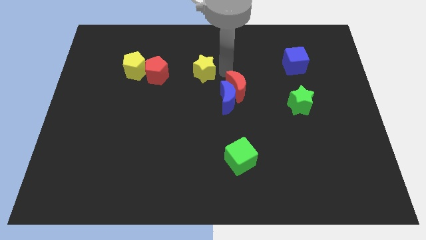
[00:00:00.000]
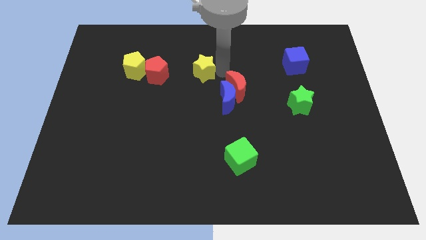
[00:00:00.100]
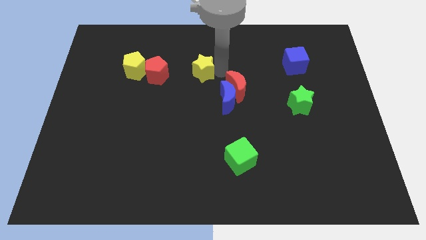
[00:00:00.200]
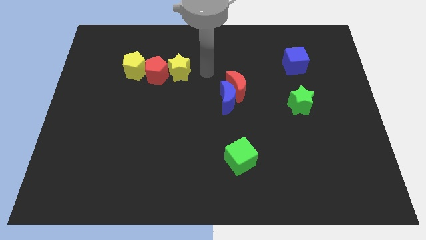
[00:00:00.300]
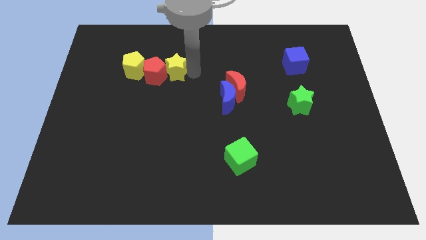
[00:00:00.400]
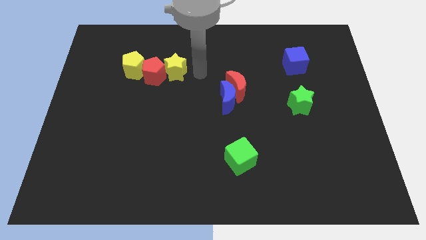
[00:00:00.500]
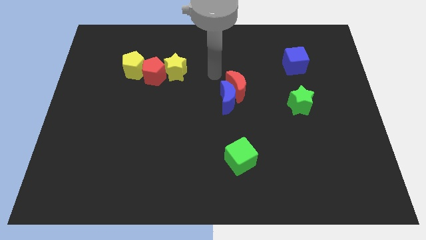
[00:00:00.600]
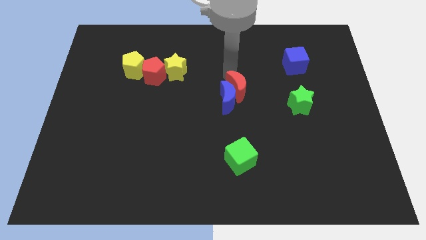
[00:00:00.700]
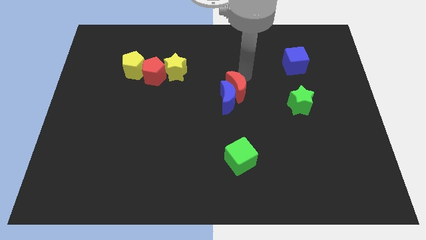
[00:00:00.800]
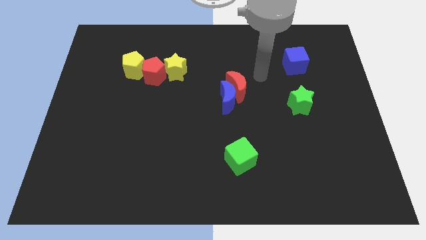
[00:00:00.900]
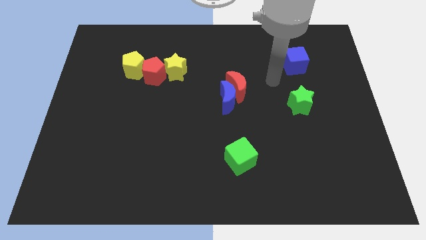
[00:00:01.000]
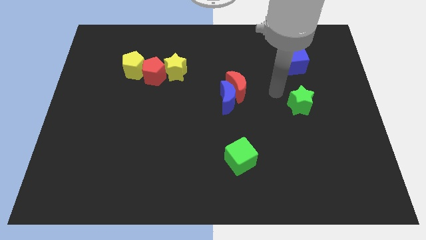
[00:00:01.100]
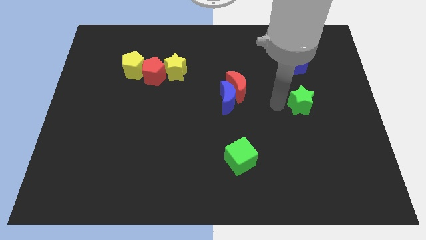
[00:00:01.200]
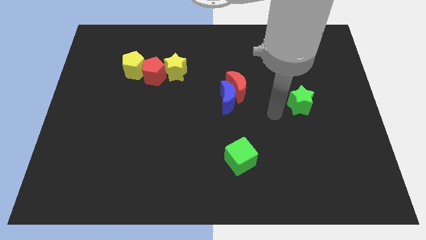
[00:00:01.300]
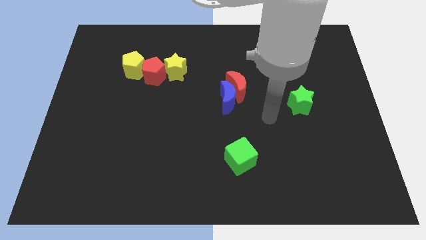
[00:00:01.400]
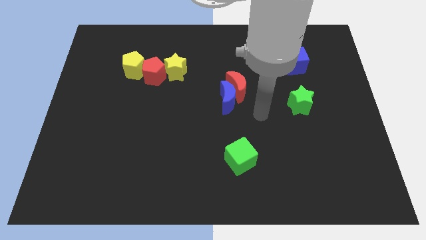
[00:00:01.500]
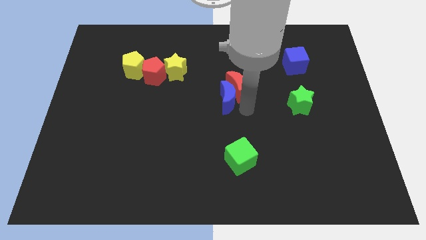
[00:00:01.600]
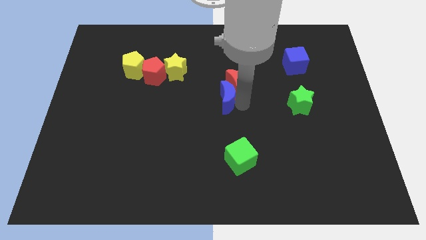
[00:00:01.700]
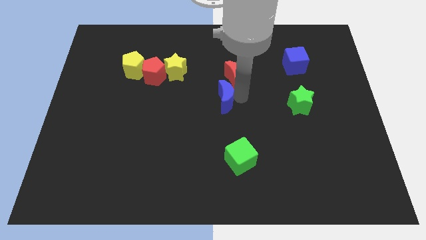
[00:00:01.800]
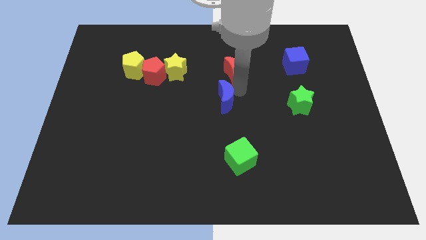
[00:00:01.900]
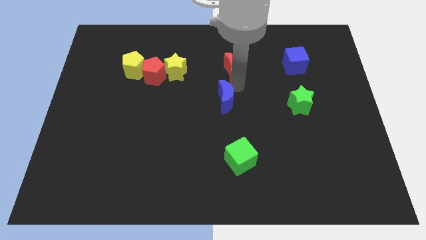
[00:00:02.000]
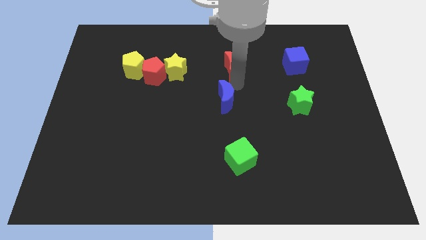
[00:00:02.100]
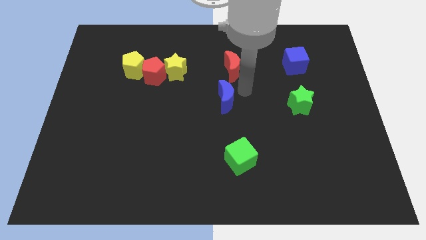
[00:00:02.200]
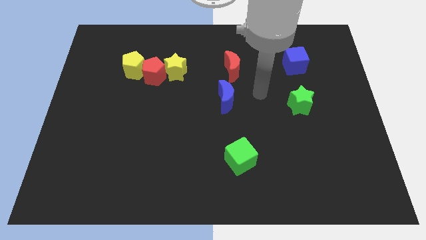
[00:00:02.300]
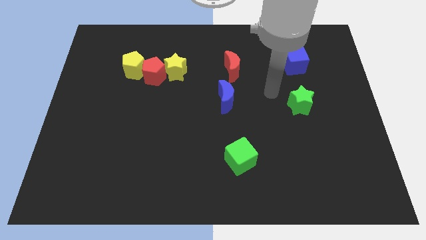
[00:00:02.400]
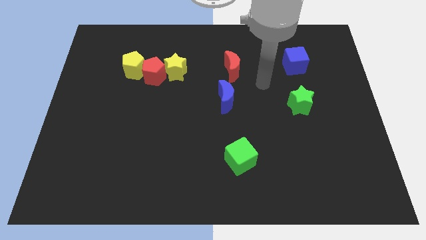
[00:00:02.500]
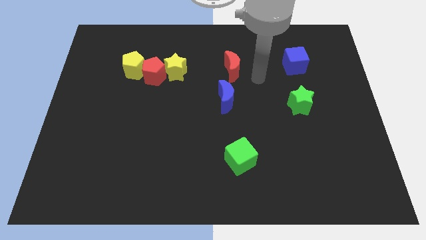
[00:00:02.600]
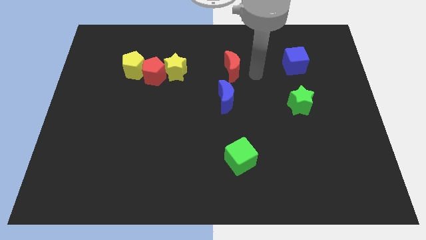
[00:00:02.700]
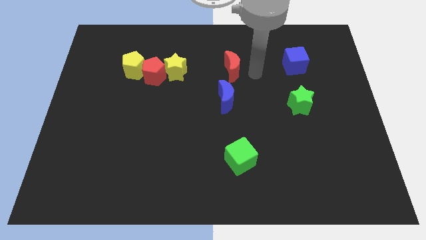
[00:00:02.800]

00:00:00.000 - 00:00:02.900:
move the yellow star right to the red pentagon

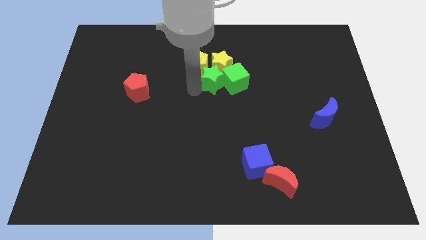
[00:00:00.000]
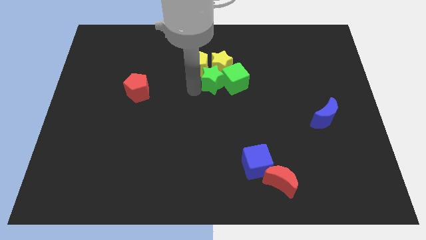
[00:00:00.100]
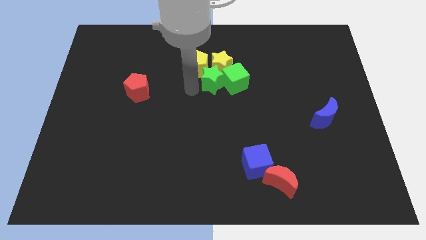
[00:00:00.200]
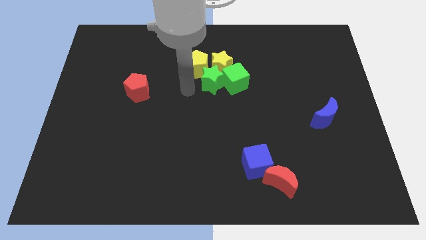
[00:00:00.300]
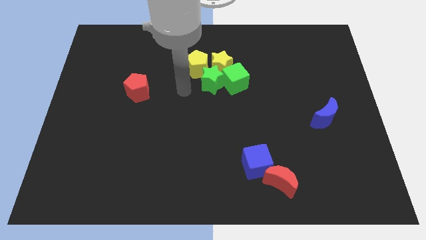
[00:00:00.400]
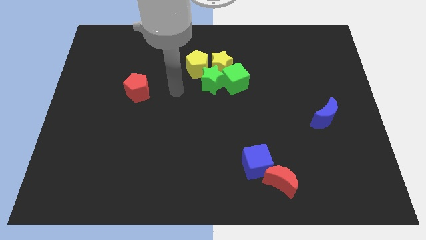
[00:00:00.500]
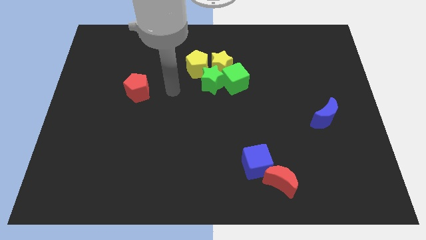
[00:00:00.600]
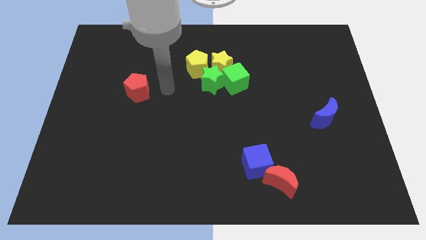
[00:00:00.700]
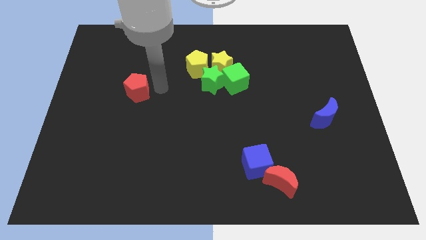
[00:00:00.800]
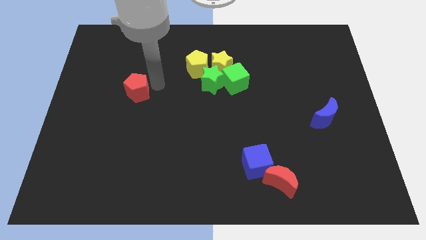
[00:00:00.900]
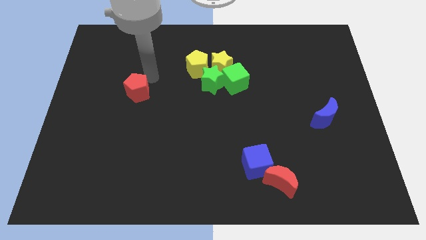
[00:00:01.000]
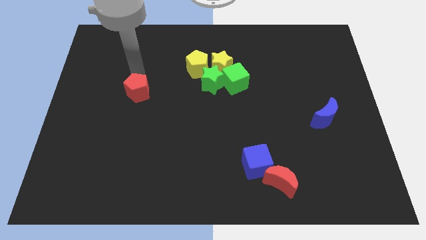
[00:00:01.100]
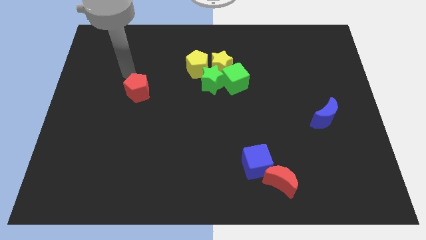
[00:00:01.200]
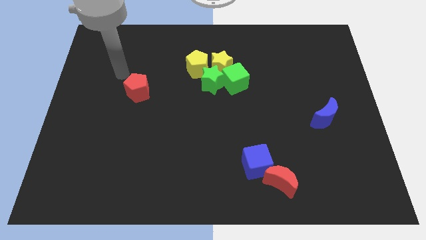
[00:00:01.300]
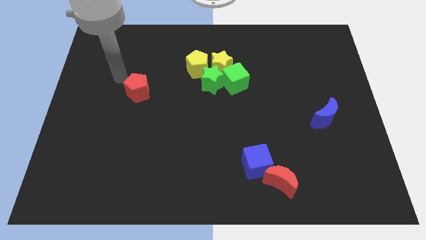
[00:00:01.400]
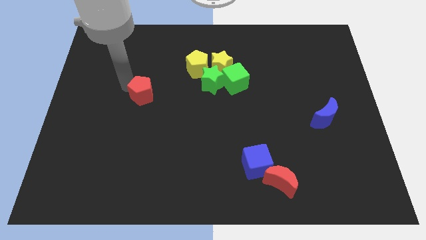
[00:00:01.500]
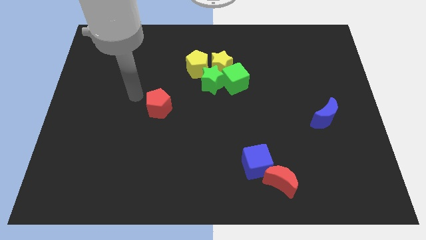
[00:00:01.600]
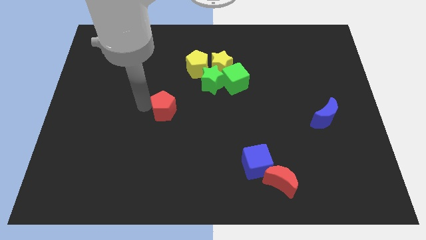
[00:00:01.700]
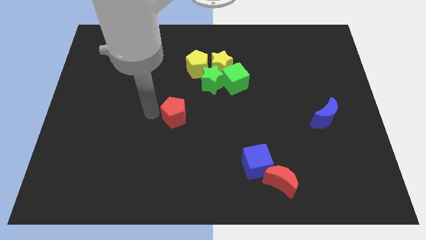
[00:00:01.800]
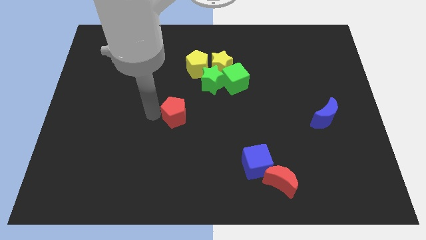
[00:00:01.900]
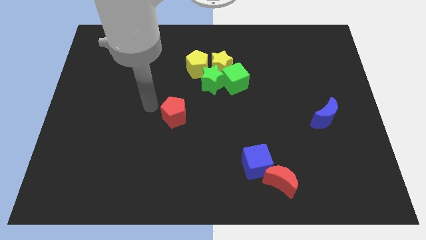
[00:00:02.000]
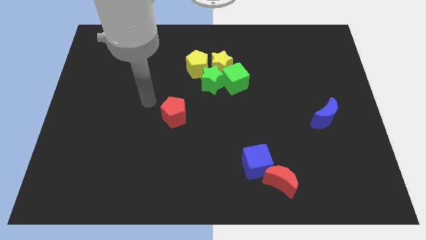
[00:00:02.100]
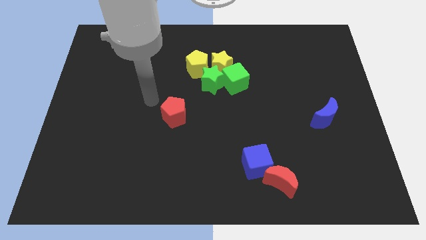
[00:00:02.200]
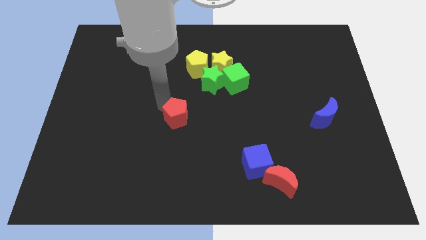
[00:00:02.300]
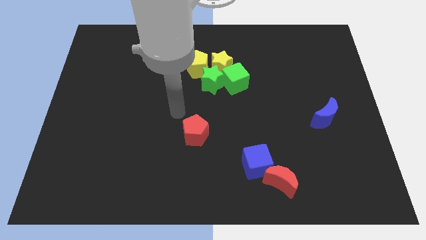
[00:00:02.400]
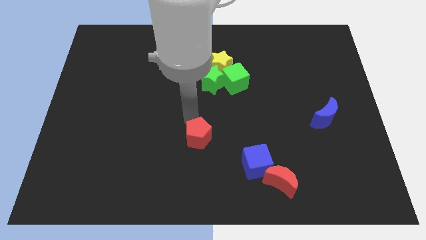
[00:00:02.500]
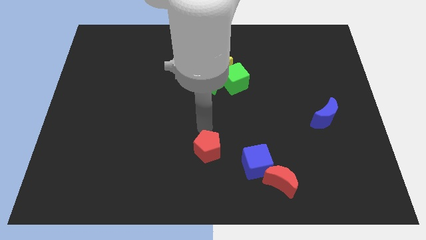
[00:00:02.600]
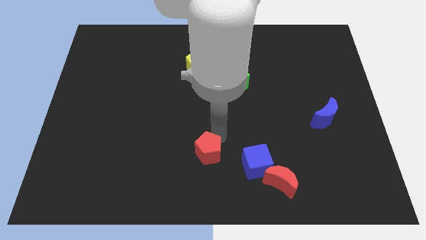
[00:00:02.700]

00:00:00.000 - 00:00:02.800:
push the red pentagon towards the bottom center of the board

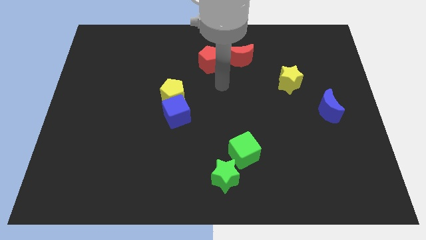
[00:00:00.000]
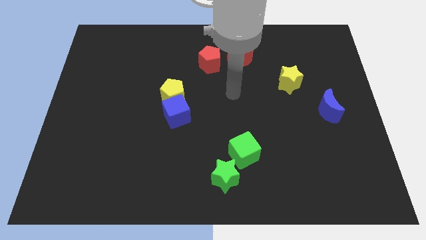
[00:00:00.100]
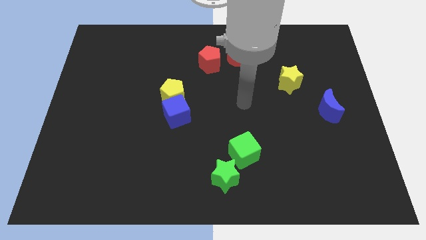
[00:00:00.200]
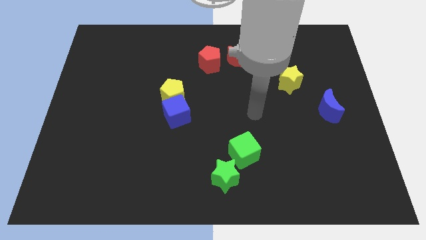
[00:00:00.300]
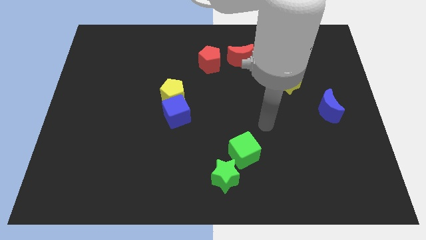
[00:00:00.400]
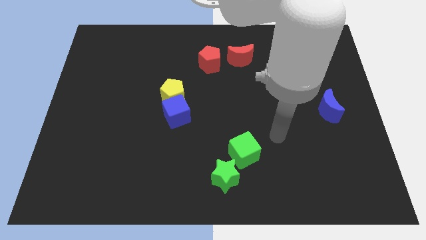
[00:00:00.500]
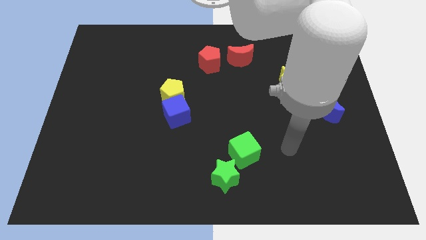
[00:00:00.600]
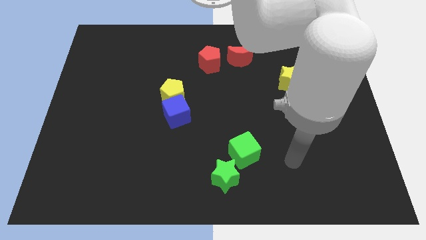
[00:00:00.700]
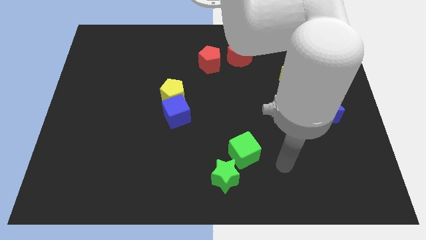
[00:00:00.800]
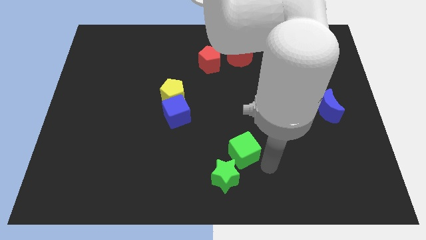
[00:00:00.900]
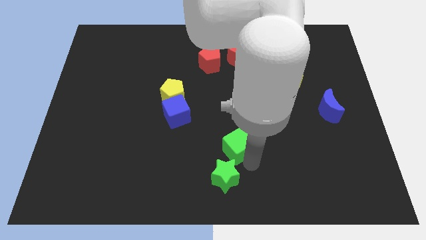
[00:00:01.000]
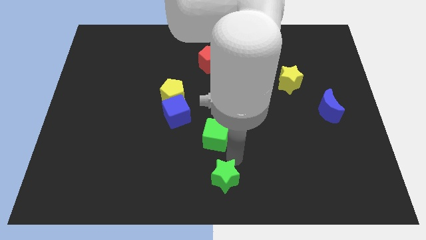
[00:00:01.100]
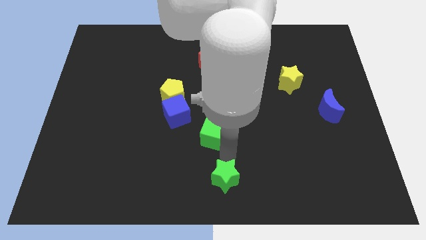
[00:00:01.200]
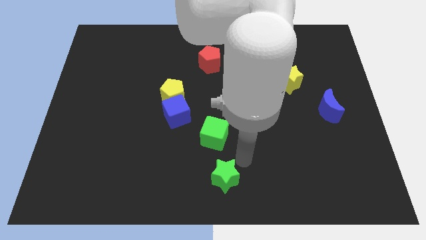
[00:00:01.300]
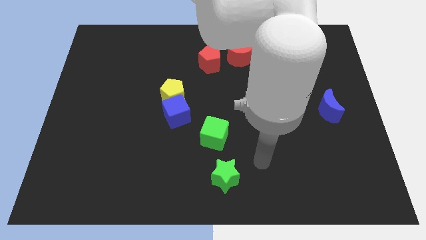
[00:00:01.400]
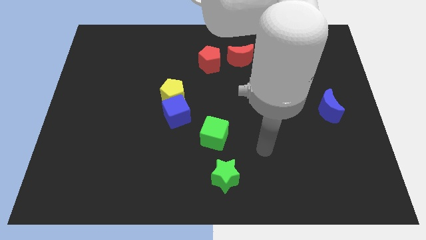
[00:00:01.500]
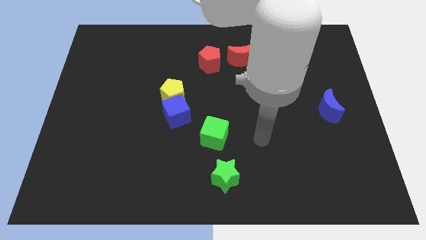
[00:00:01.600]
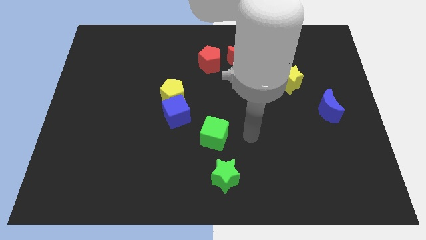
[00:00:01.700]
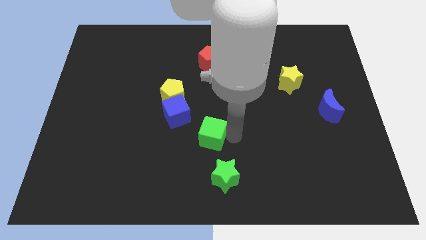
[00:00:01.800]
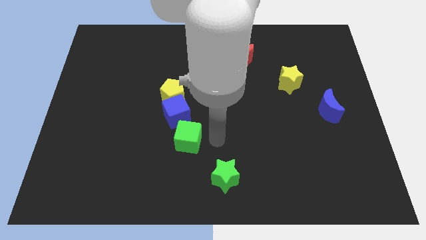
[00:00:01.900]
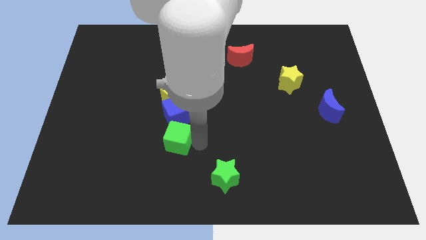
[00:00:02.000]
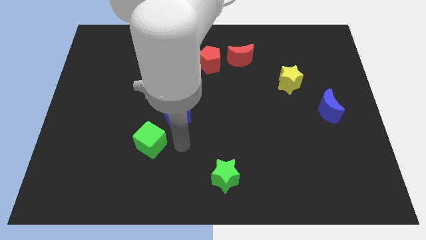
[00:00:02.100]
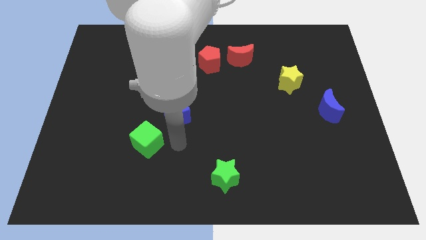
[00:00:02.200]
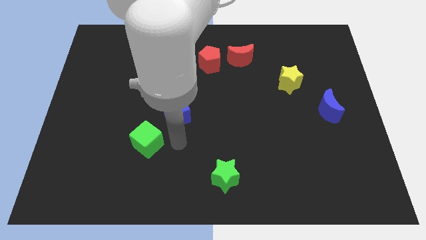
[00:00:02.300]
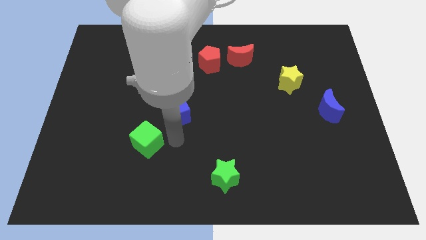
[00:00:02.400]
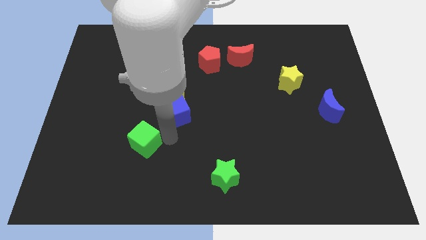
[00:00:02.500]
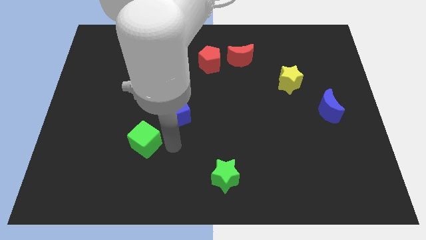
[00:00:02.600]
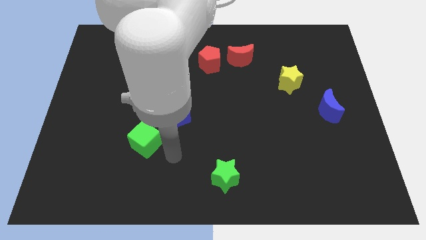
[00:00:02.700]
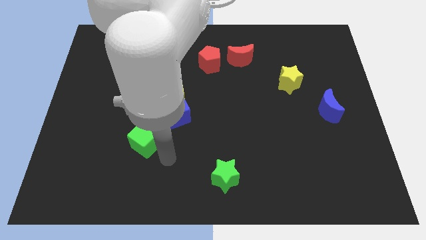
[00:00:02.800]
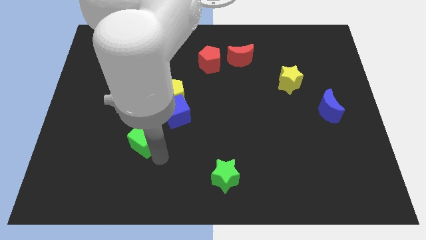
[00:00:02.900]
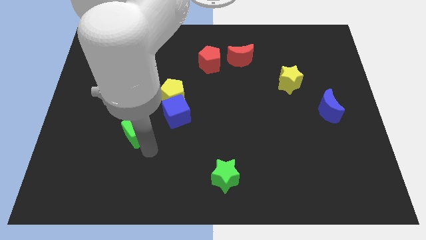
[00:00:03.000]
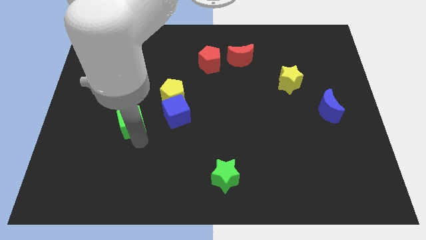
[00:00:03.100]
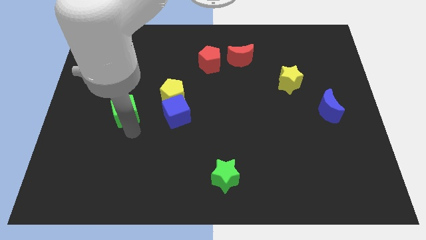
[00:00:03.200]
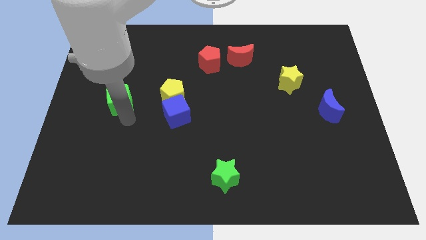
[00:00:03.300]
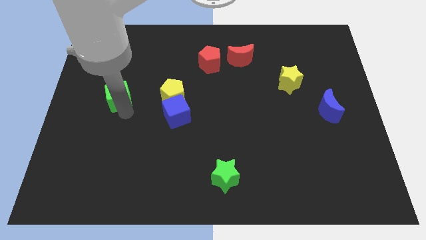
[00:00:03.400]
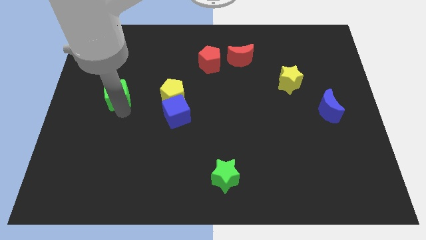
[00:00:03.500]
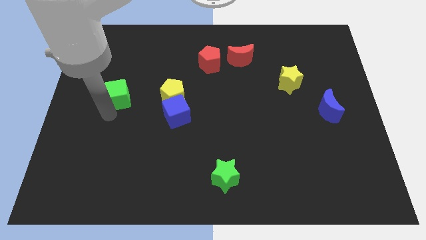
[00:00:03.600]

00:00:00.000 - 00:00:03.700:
move the green cube to the left of the yellow pentagon
